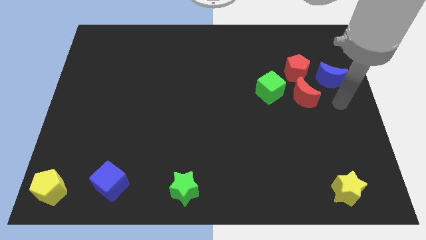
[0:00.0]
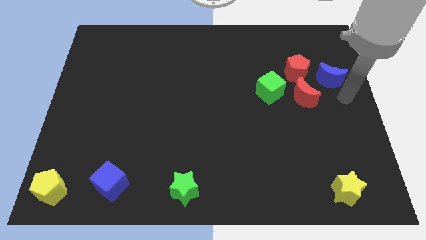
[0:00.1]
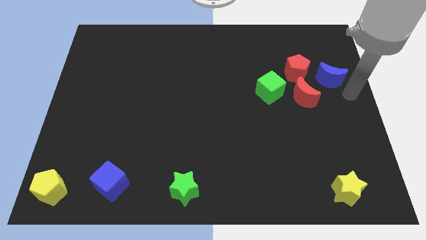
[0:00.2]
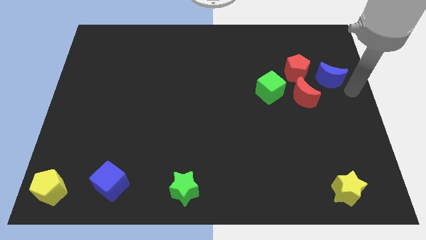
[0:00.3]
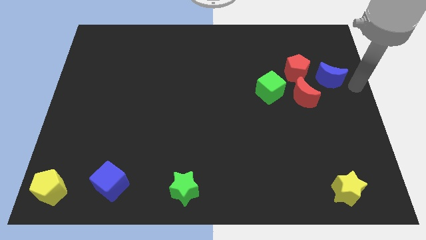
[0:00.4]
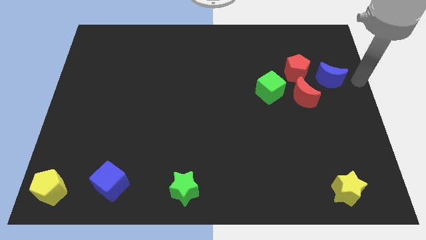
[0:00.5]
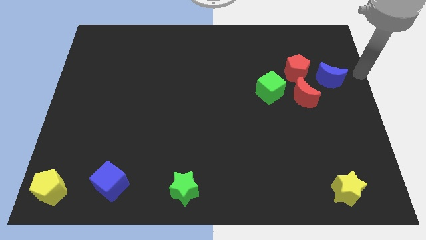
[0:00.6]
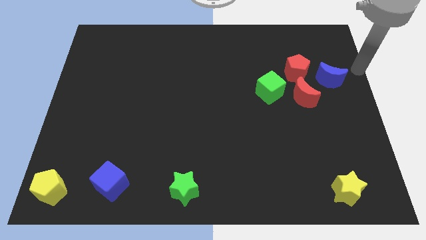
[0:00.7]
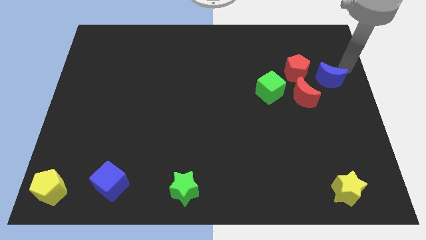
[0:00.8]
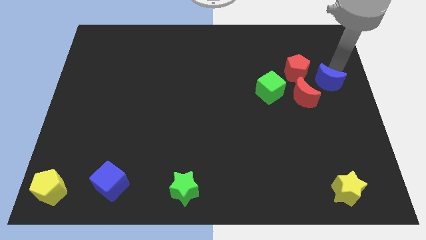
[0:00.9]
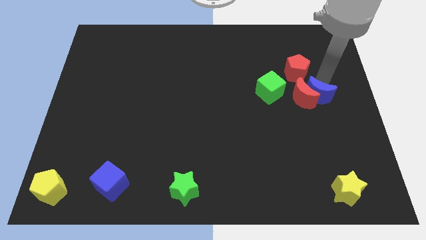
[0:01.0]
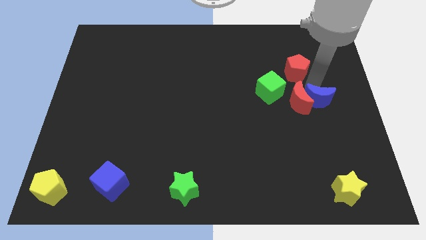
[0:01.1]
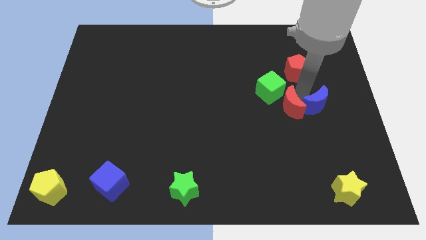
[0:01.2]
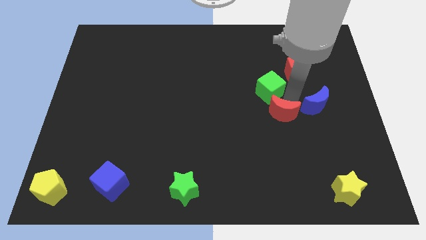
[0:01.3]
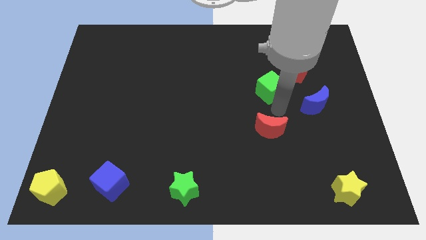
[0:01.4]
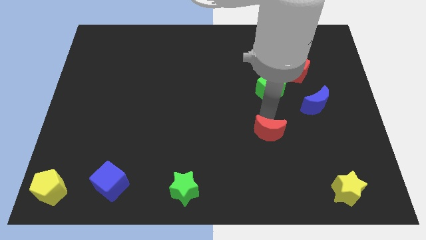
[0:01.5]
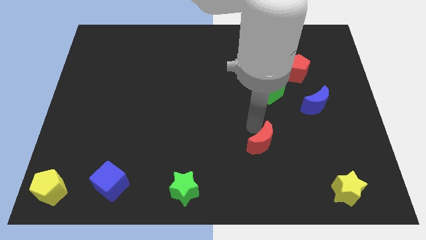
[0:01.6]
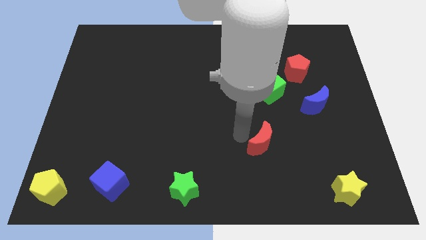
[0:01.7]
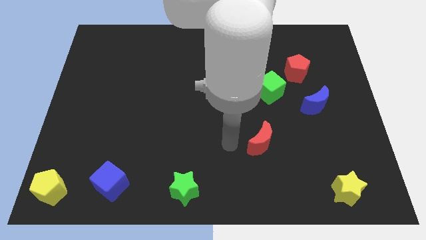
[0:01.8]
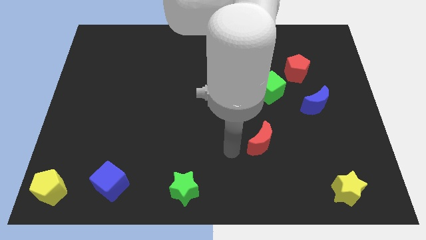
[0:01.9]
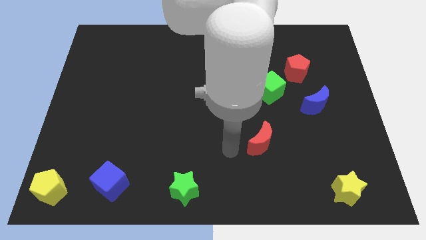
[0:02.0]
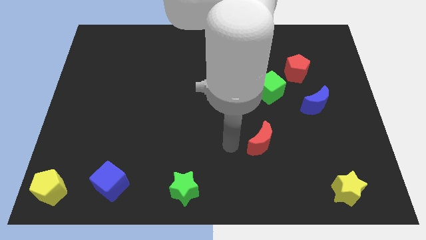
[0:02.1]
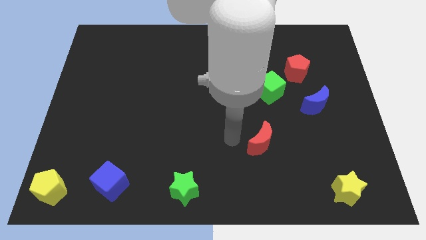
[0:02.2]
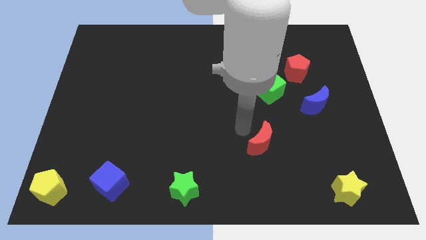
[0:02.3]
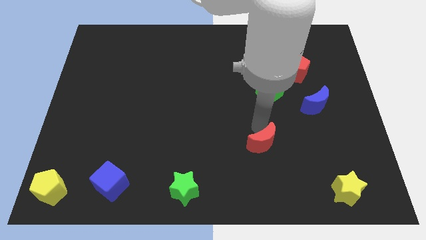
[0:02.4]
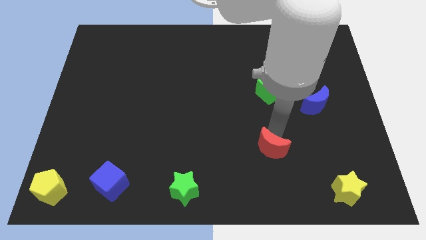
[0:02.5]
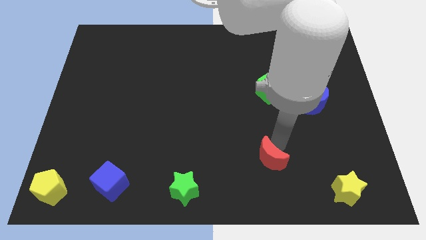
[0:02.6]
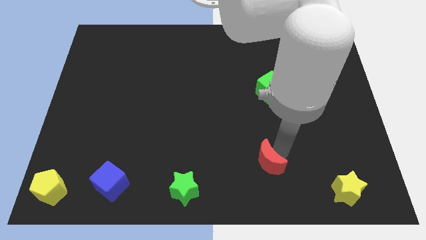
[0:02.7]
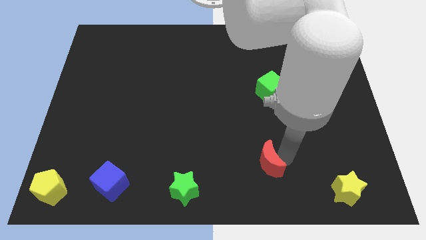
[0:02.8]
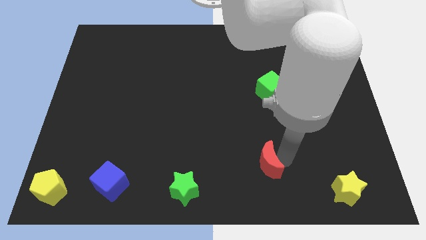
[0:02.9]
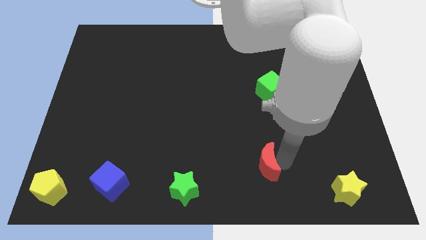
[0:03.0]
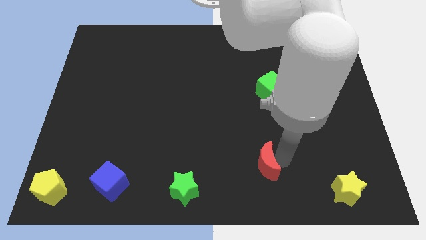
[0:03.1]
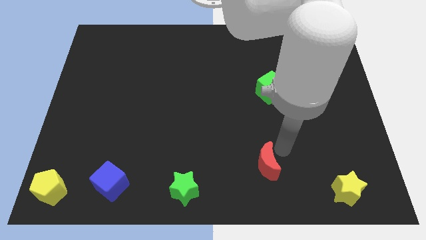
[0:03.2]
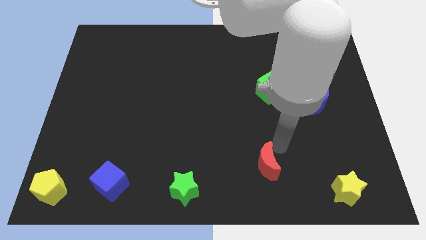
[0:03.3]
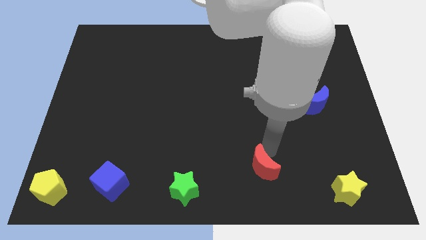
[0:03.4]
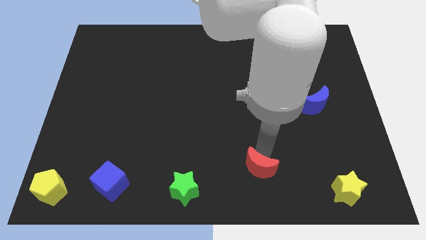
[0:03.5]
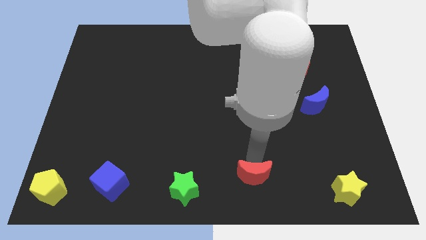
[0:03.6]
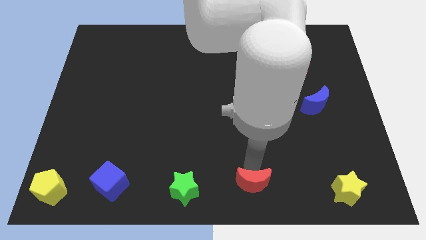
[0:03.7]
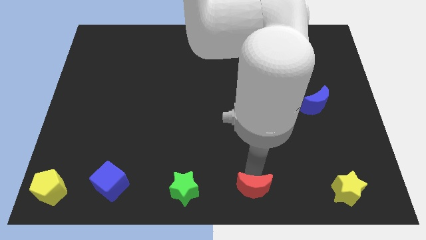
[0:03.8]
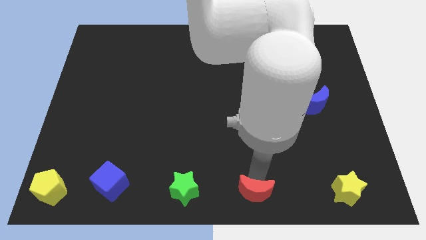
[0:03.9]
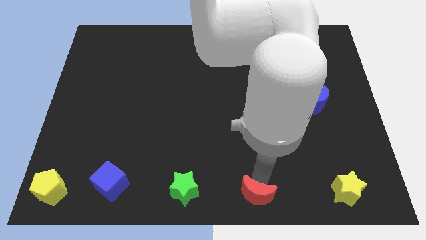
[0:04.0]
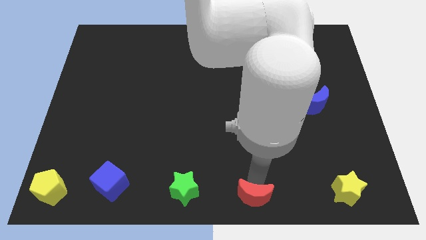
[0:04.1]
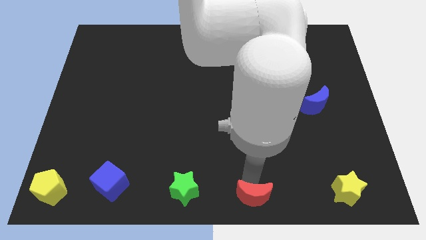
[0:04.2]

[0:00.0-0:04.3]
move the red crescent in between the green and yellow stars

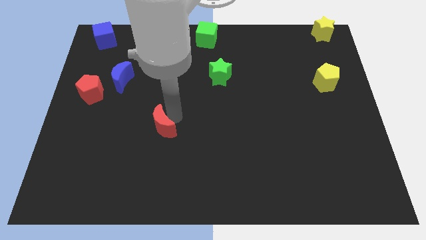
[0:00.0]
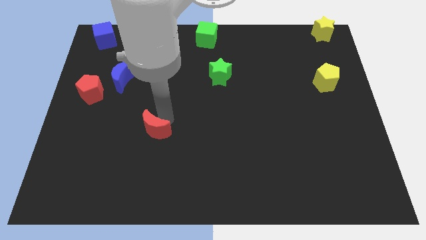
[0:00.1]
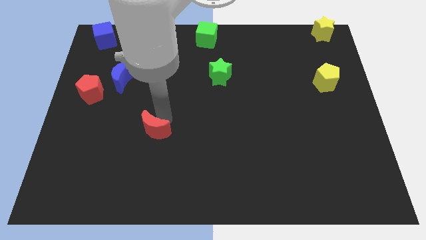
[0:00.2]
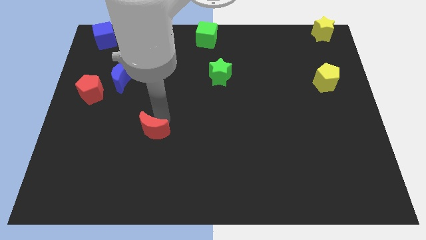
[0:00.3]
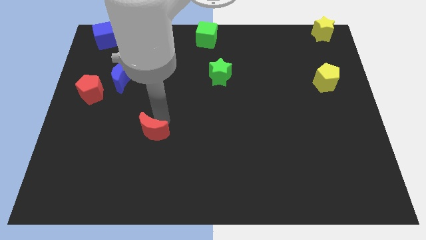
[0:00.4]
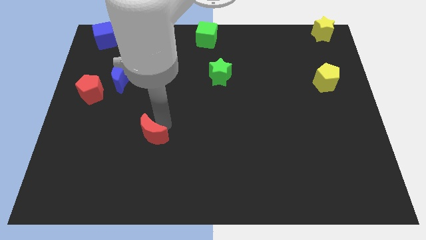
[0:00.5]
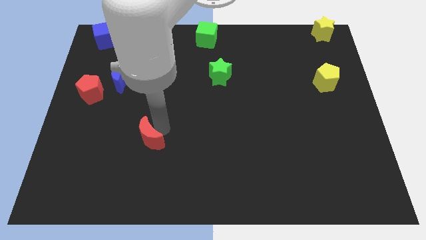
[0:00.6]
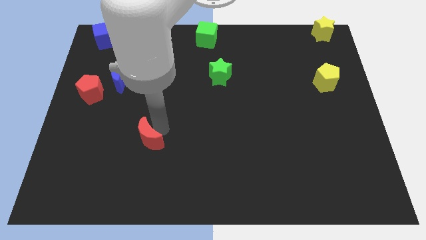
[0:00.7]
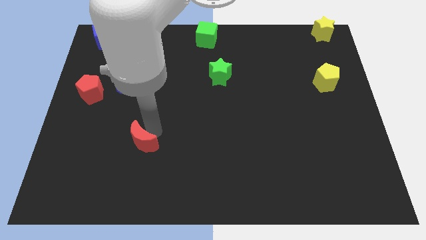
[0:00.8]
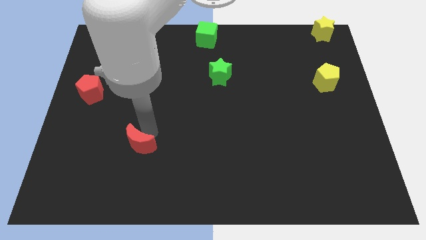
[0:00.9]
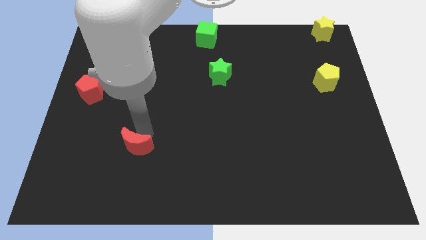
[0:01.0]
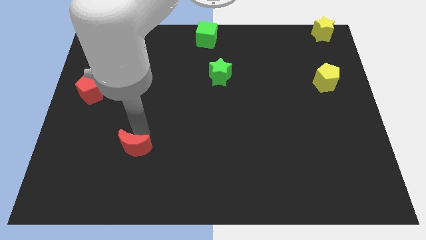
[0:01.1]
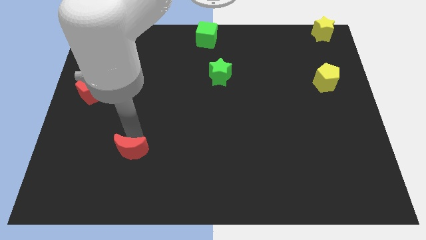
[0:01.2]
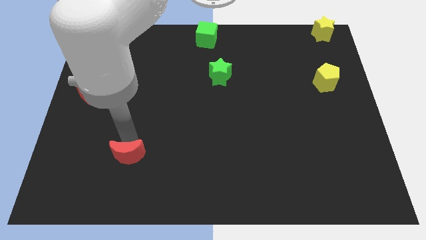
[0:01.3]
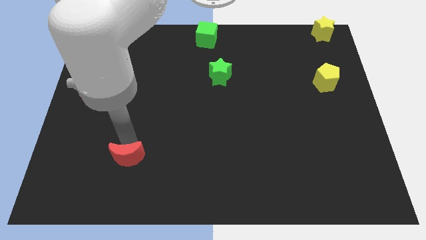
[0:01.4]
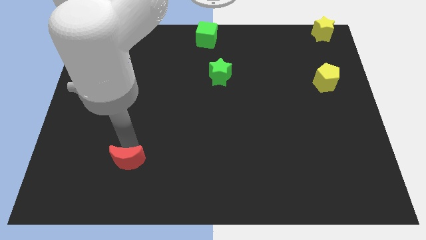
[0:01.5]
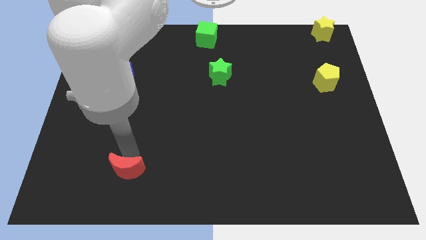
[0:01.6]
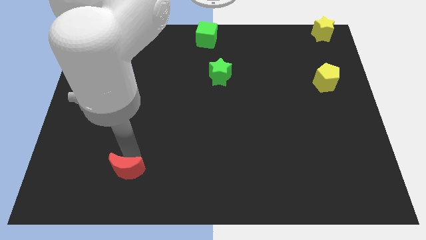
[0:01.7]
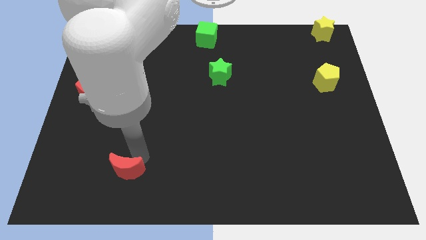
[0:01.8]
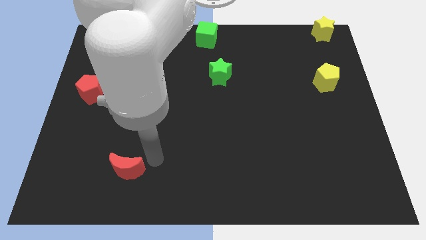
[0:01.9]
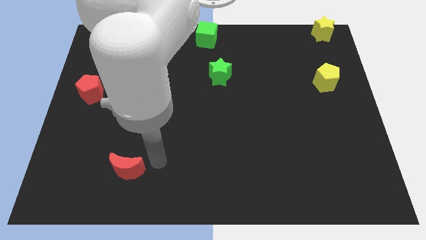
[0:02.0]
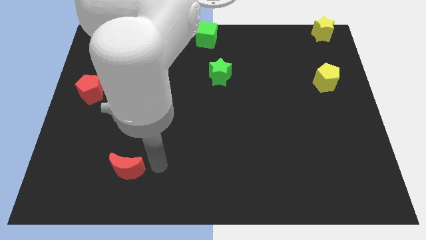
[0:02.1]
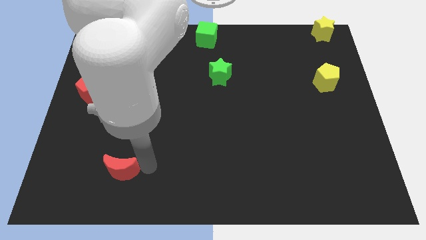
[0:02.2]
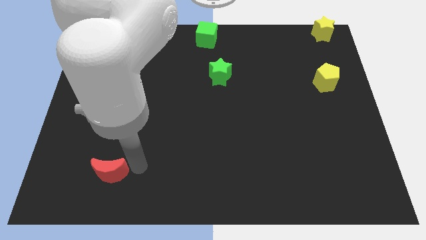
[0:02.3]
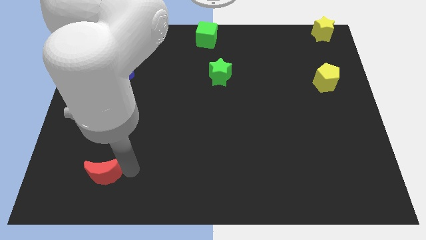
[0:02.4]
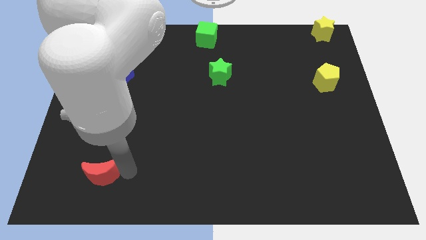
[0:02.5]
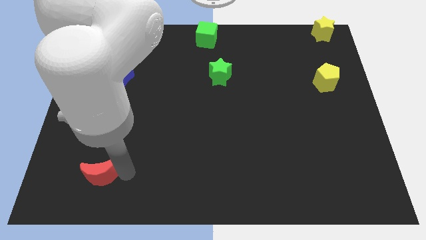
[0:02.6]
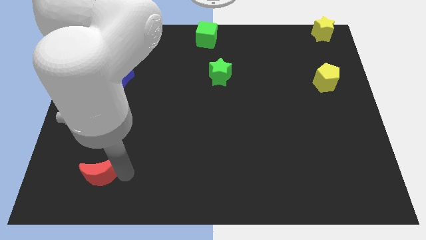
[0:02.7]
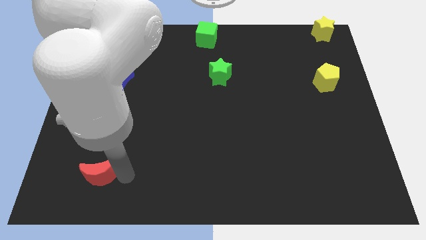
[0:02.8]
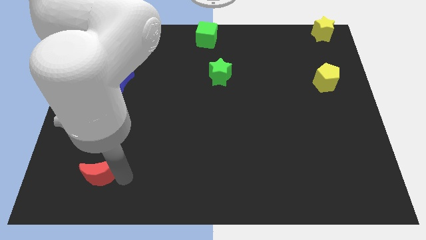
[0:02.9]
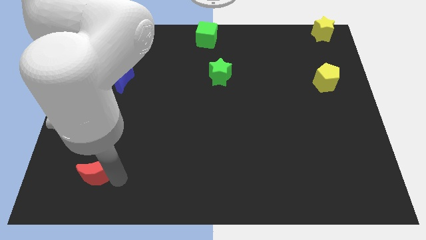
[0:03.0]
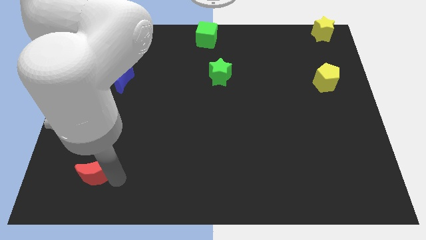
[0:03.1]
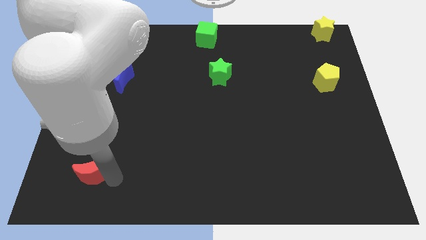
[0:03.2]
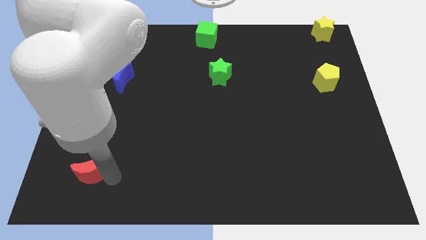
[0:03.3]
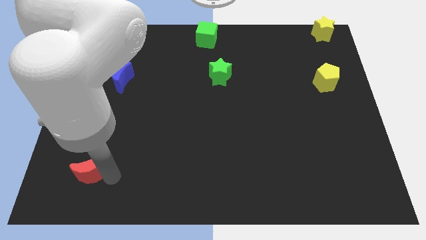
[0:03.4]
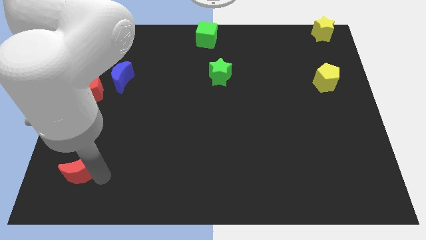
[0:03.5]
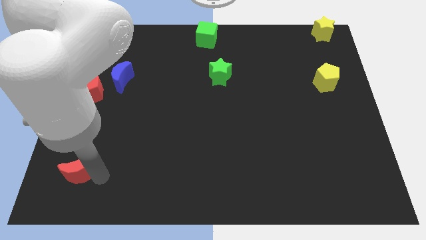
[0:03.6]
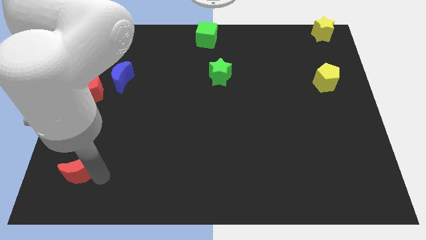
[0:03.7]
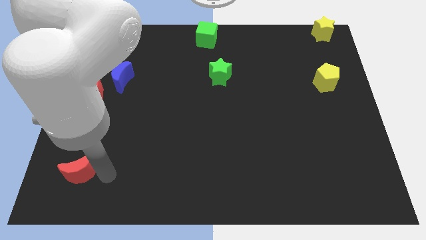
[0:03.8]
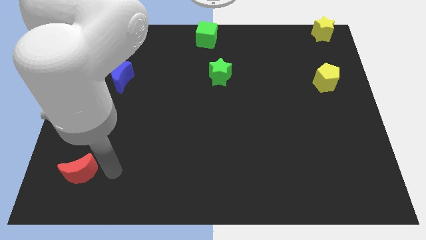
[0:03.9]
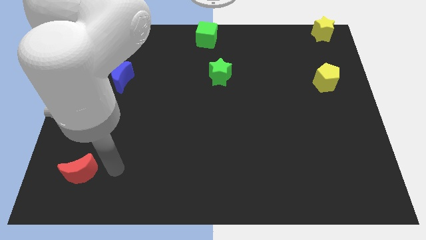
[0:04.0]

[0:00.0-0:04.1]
move the red crescent towards the bottom left side of the board

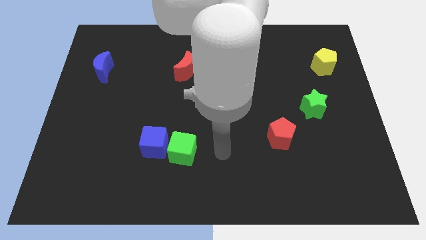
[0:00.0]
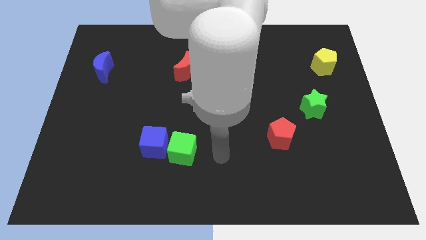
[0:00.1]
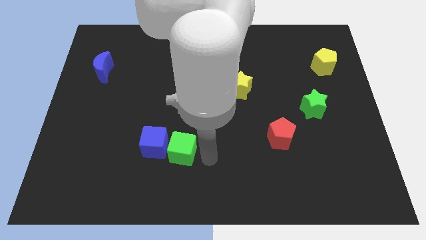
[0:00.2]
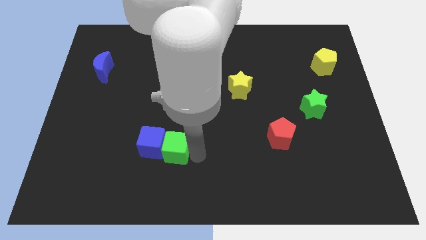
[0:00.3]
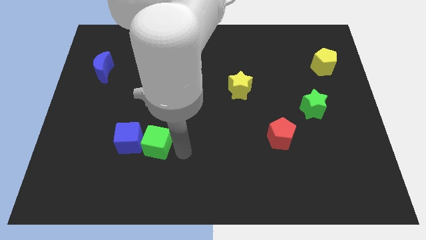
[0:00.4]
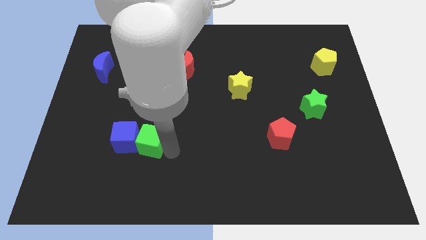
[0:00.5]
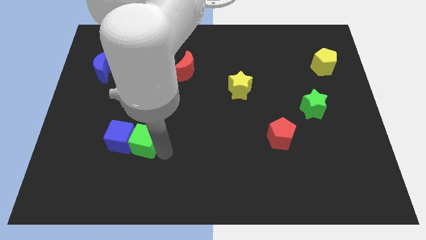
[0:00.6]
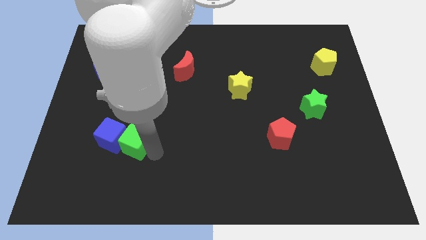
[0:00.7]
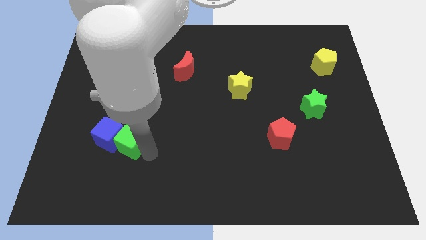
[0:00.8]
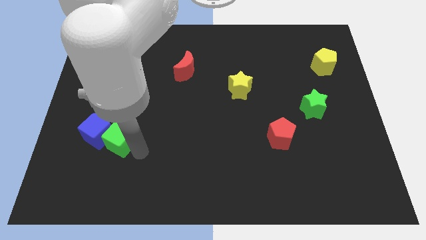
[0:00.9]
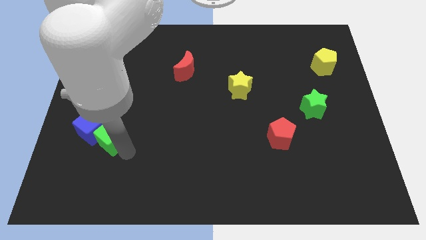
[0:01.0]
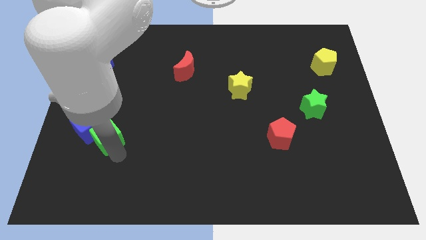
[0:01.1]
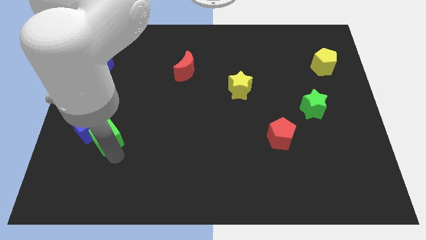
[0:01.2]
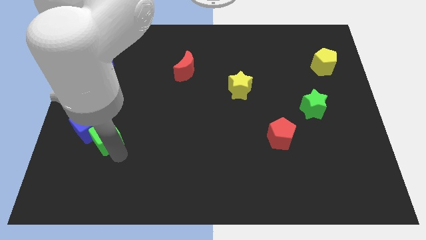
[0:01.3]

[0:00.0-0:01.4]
push the green cube and blue cube to the center left
